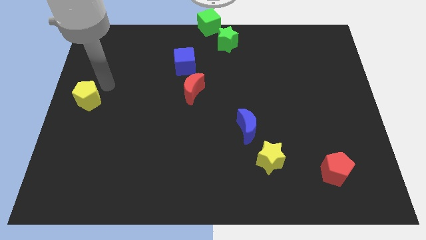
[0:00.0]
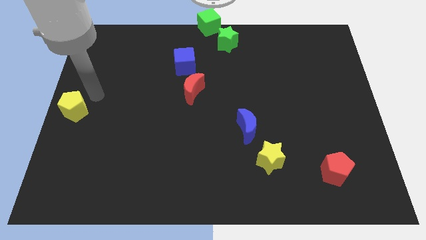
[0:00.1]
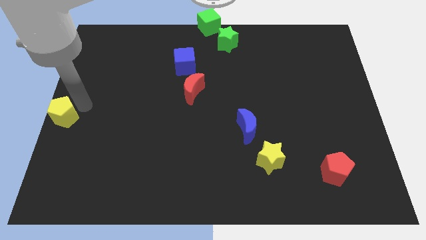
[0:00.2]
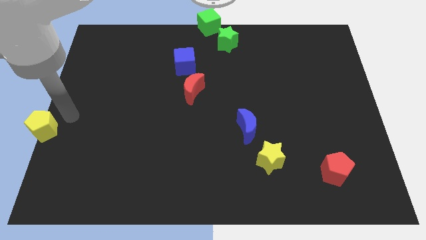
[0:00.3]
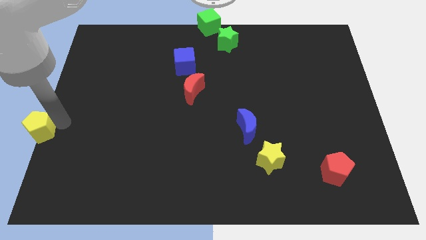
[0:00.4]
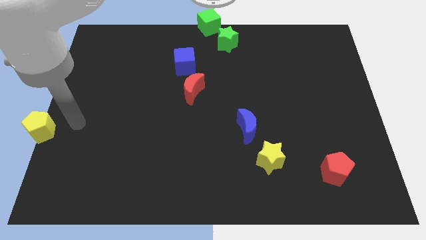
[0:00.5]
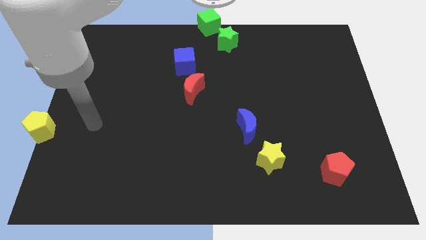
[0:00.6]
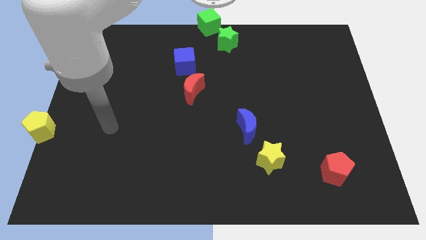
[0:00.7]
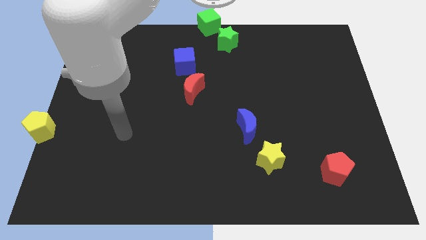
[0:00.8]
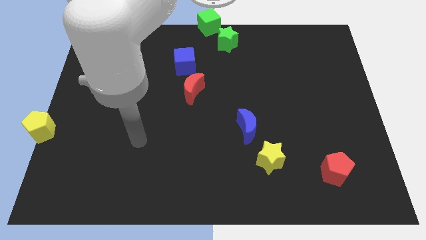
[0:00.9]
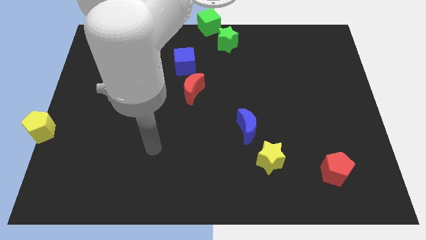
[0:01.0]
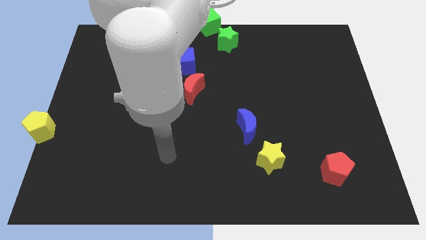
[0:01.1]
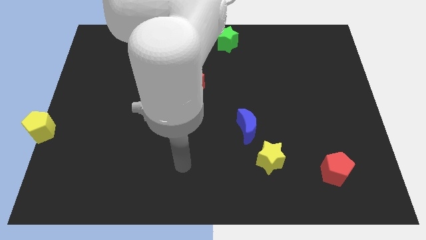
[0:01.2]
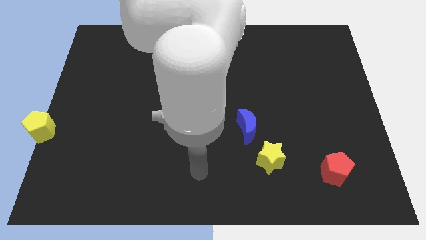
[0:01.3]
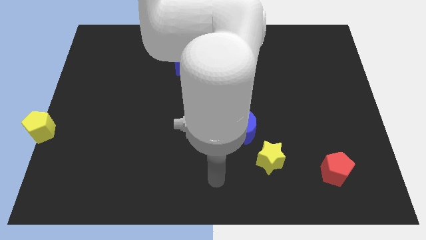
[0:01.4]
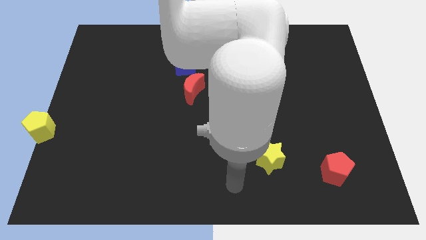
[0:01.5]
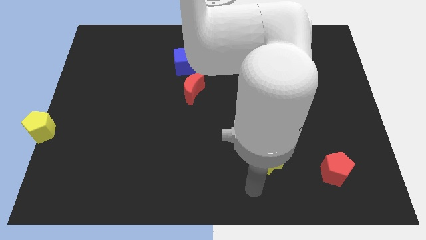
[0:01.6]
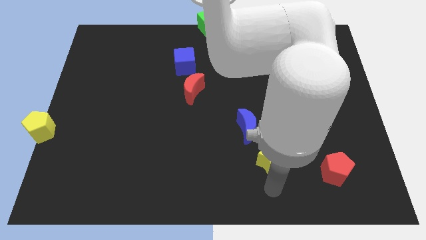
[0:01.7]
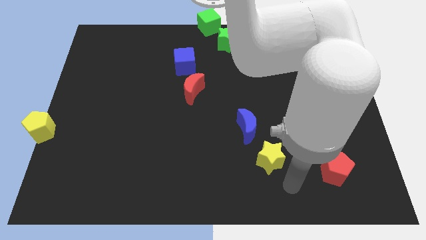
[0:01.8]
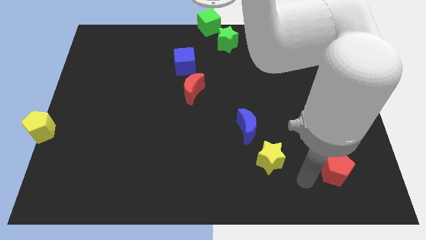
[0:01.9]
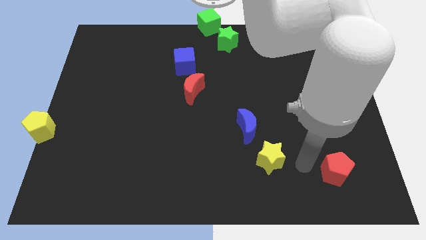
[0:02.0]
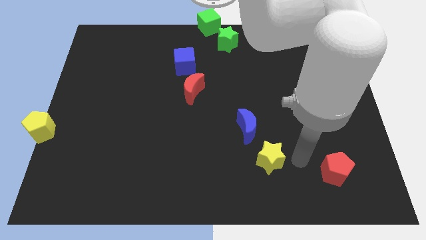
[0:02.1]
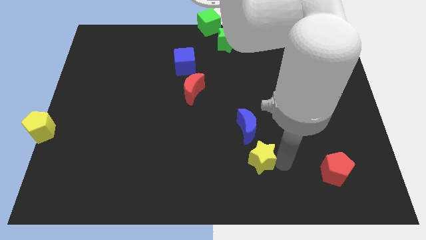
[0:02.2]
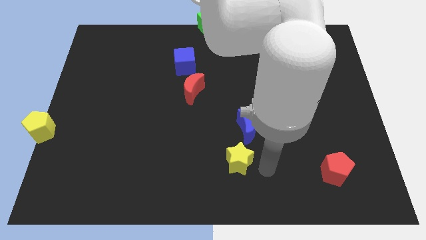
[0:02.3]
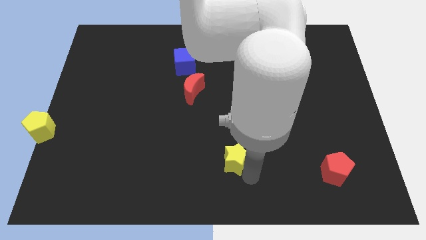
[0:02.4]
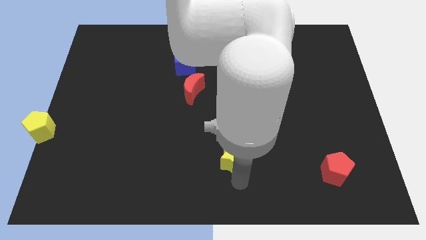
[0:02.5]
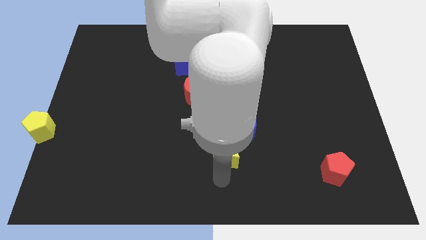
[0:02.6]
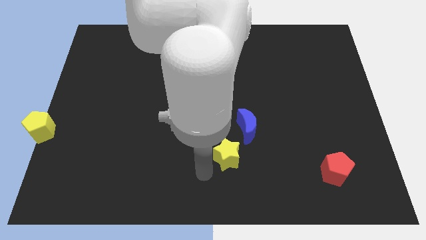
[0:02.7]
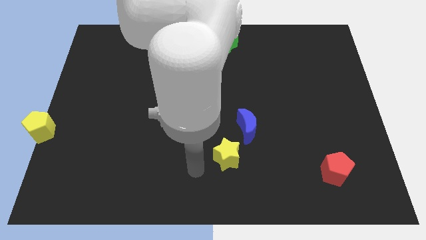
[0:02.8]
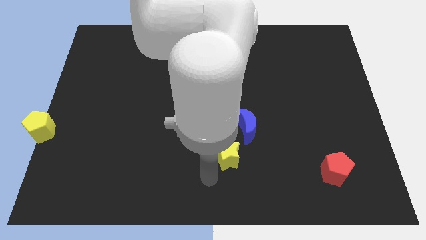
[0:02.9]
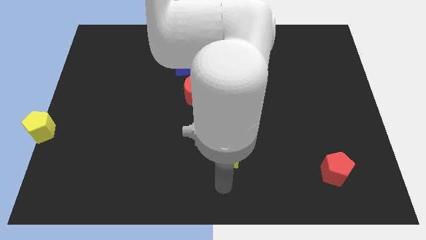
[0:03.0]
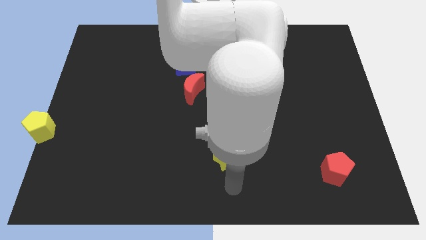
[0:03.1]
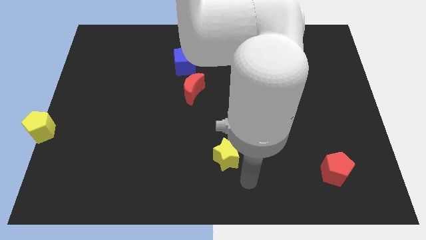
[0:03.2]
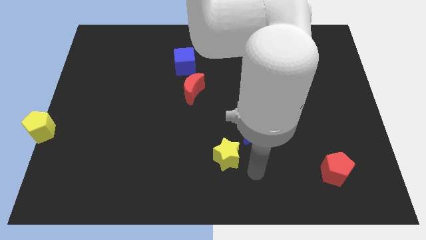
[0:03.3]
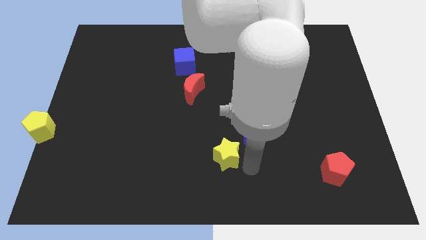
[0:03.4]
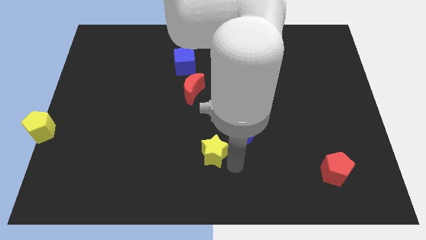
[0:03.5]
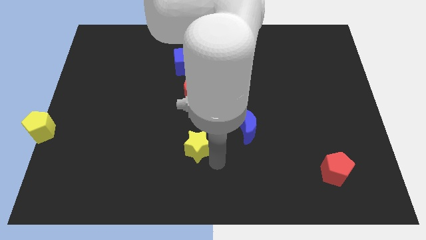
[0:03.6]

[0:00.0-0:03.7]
place the yellow star below the red moon

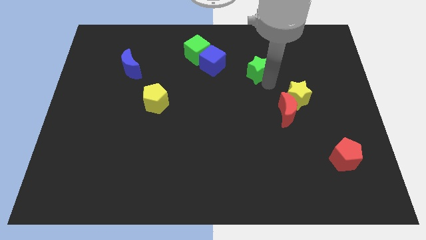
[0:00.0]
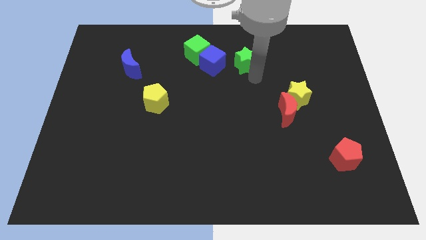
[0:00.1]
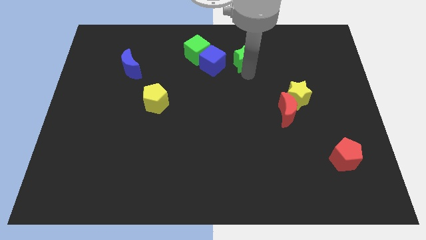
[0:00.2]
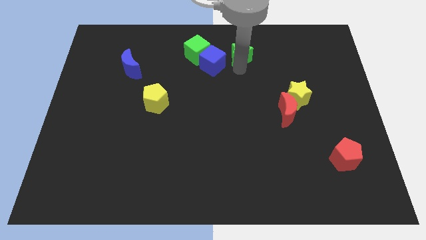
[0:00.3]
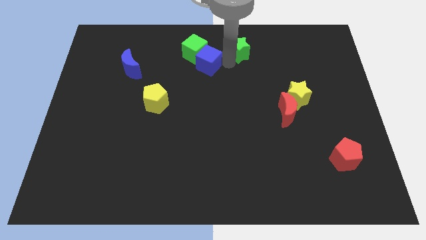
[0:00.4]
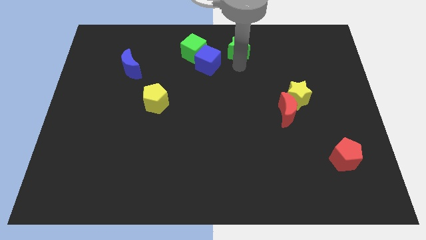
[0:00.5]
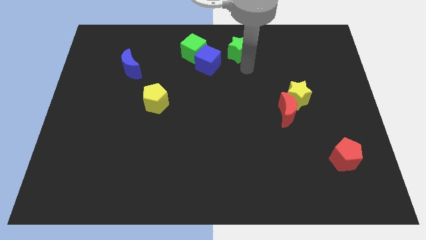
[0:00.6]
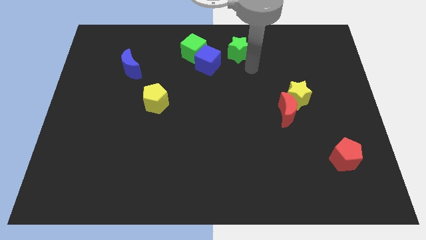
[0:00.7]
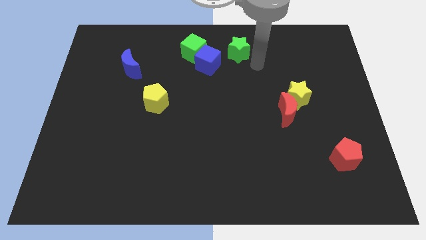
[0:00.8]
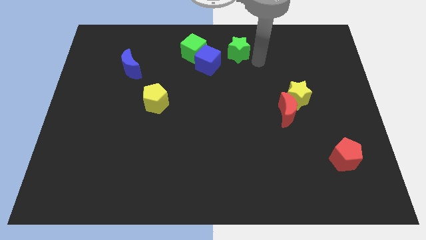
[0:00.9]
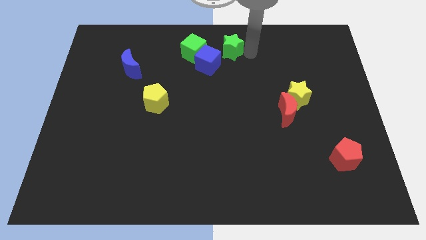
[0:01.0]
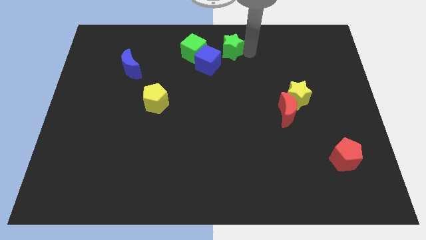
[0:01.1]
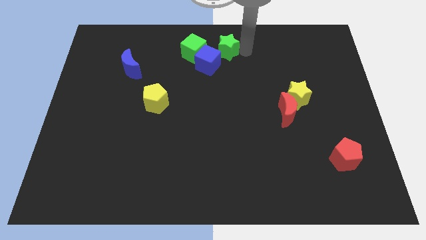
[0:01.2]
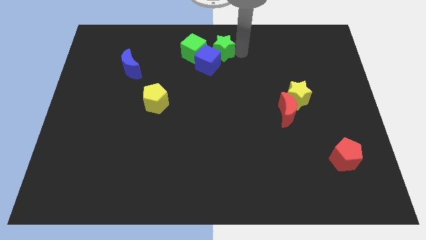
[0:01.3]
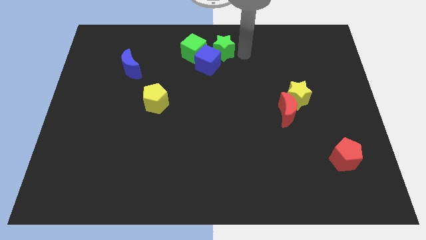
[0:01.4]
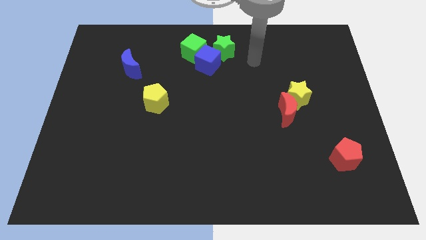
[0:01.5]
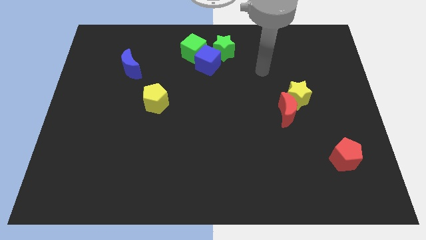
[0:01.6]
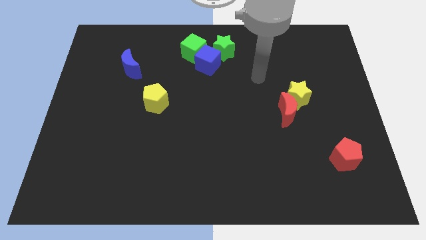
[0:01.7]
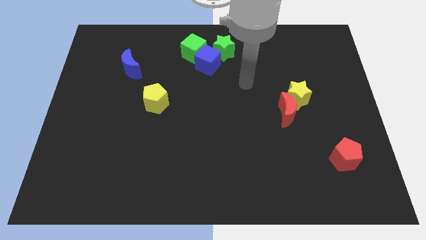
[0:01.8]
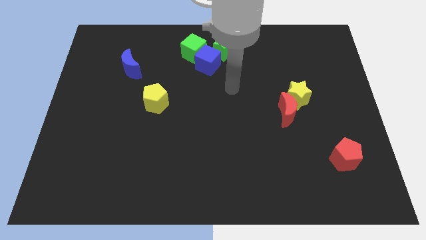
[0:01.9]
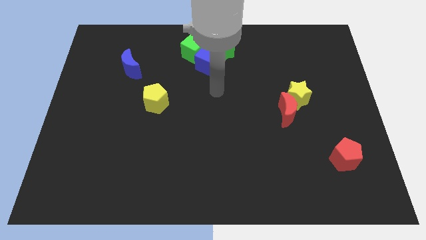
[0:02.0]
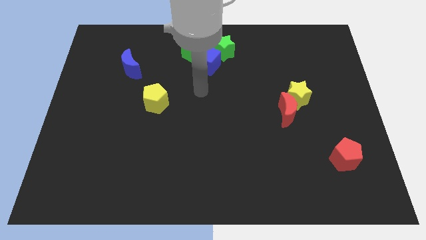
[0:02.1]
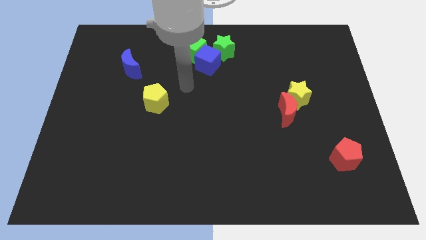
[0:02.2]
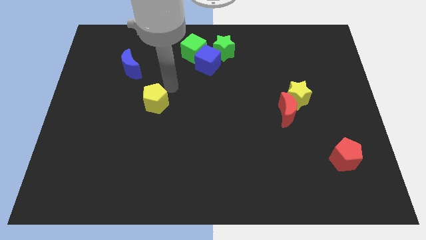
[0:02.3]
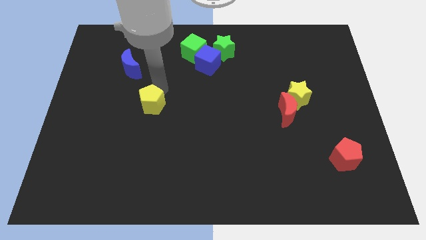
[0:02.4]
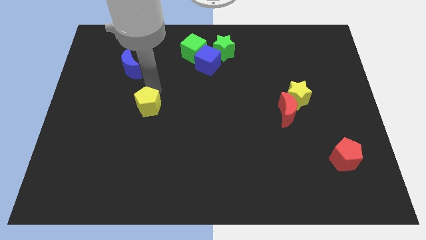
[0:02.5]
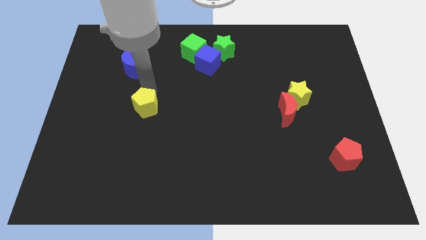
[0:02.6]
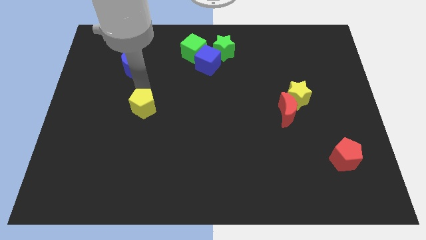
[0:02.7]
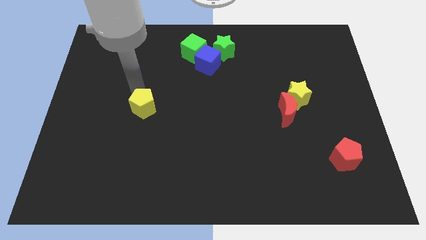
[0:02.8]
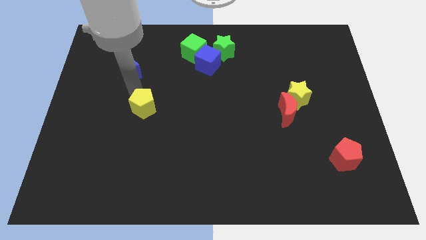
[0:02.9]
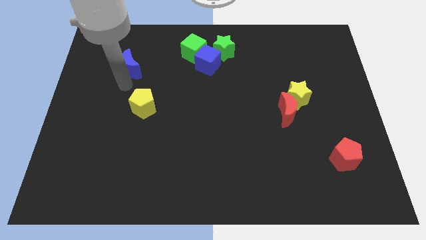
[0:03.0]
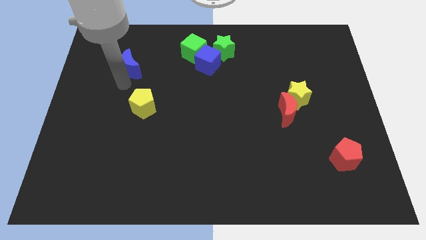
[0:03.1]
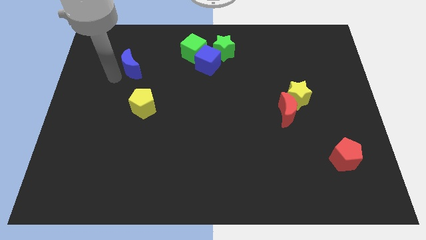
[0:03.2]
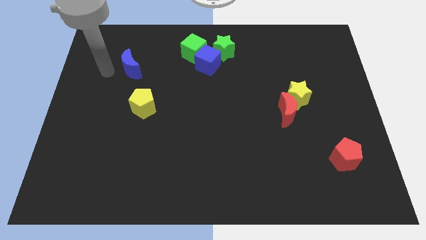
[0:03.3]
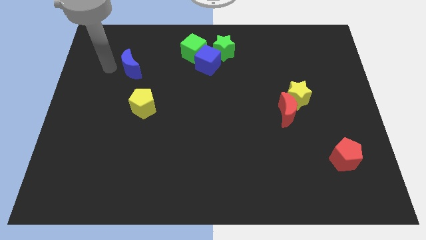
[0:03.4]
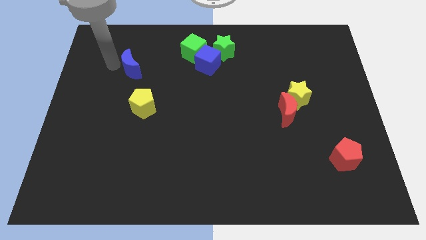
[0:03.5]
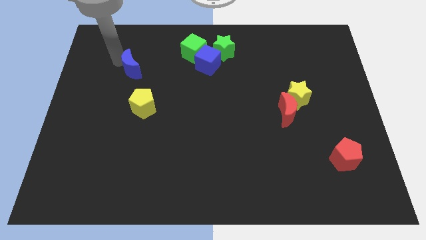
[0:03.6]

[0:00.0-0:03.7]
push the green star and place it above the blue cube

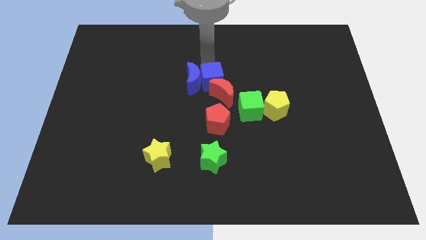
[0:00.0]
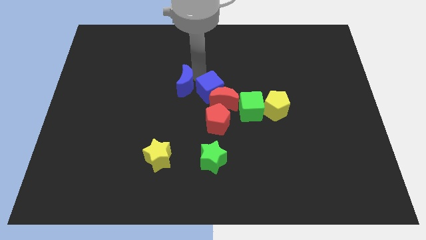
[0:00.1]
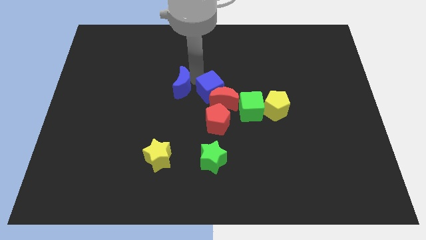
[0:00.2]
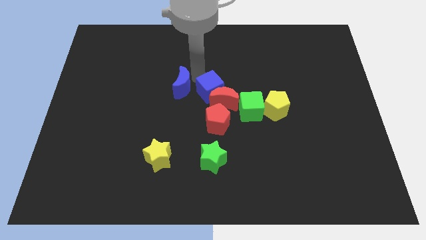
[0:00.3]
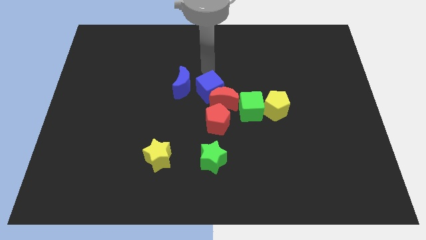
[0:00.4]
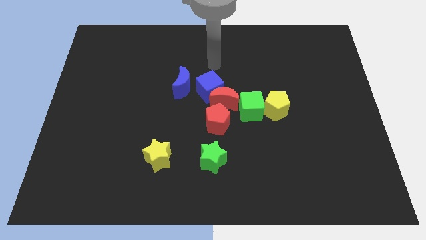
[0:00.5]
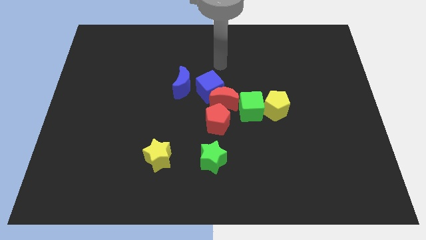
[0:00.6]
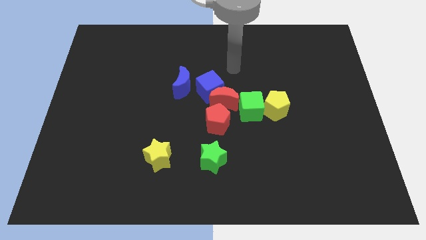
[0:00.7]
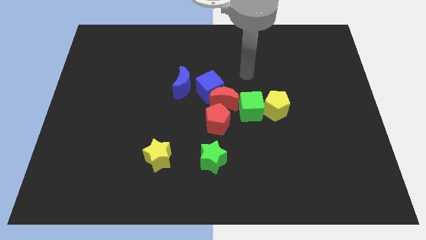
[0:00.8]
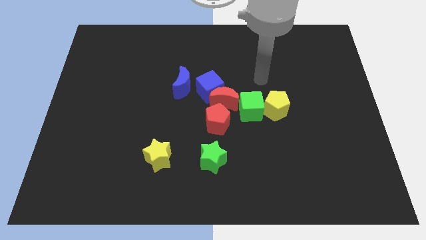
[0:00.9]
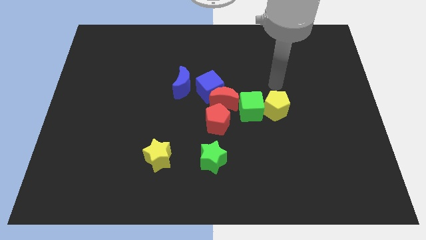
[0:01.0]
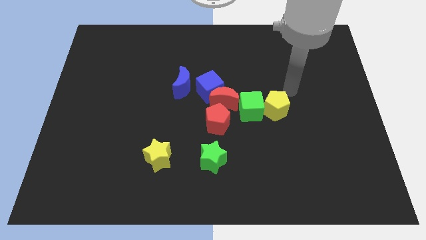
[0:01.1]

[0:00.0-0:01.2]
move blue moon and the blue cube away from each other

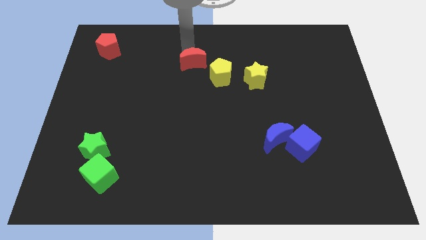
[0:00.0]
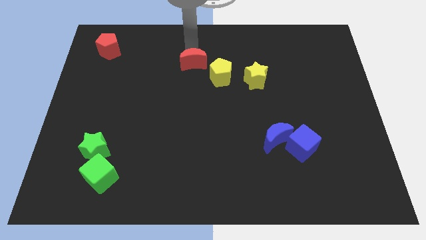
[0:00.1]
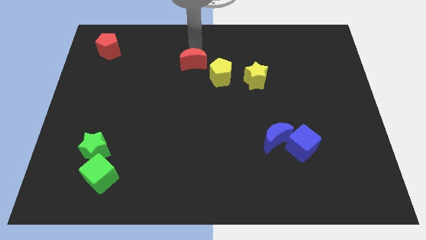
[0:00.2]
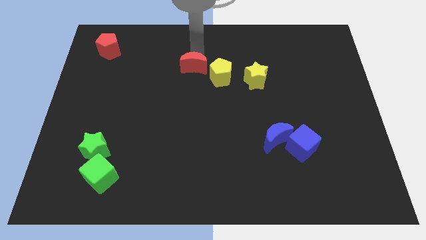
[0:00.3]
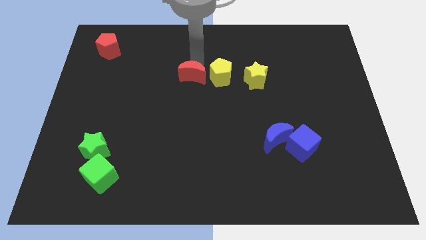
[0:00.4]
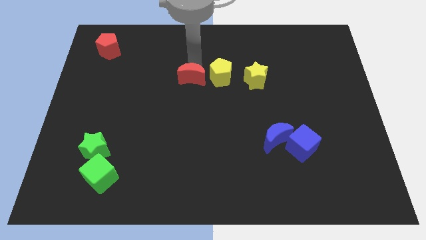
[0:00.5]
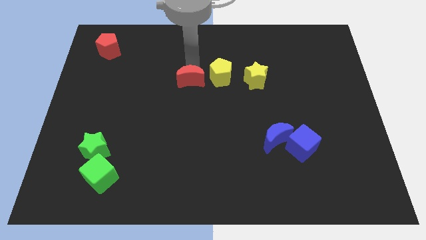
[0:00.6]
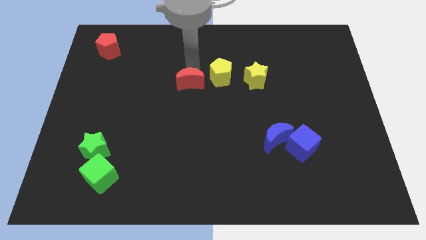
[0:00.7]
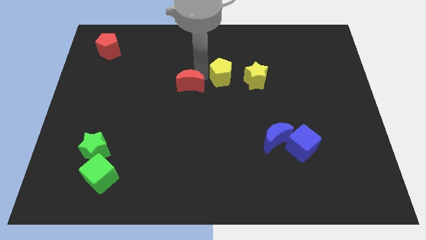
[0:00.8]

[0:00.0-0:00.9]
move the red crescent left to the yellow pentagon
